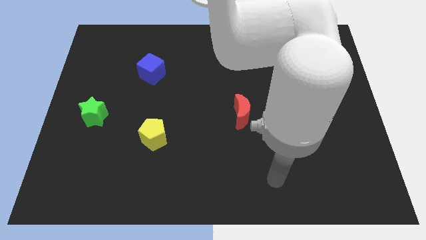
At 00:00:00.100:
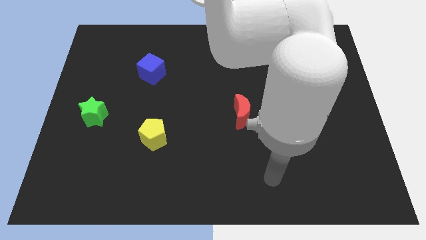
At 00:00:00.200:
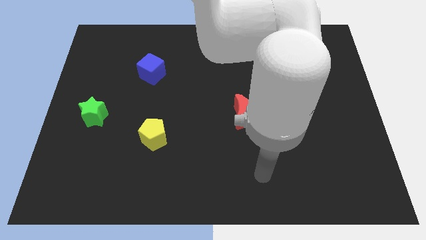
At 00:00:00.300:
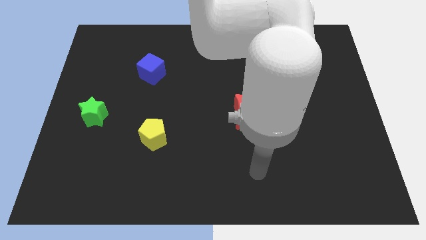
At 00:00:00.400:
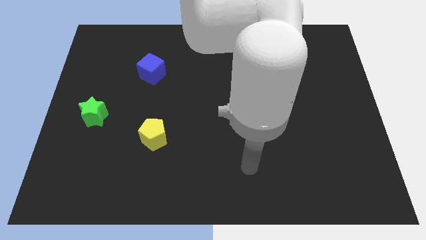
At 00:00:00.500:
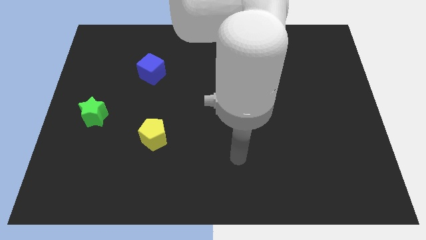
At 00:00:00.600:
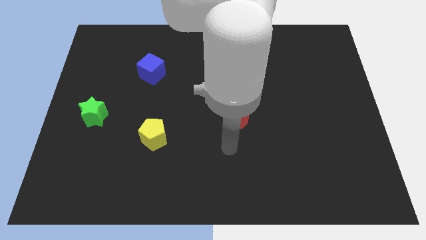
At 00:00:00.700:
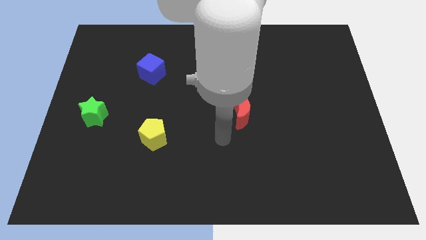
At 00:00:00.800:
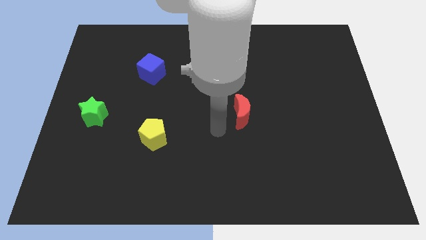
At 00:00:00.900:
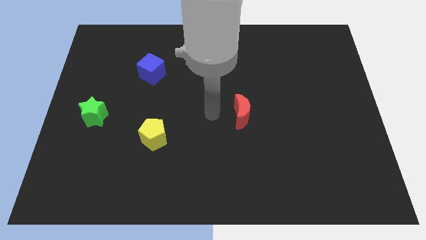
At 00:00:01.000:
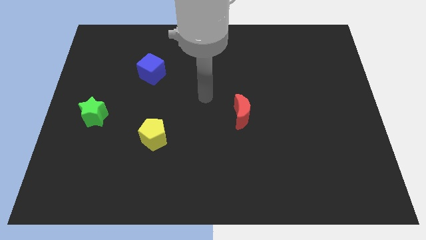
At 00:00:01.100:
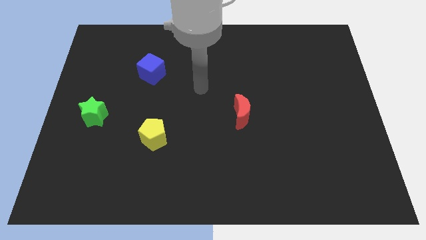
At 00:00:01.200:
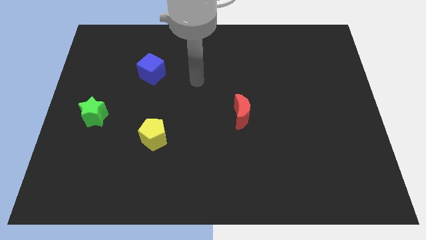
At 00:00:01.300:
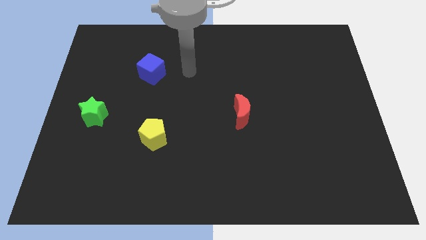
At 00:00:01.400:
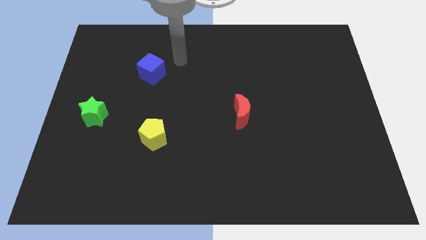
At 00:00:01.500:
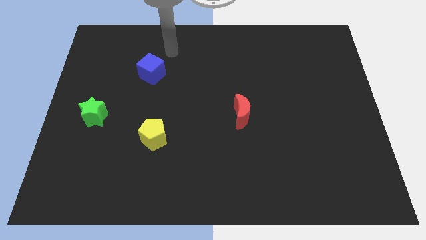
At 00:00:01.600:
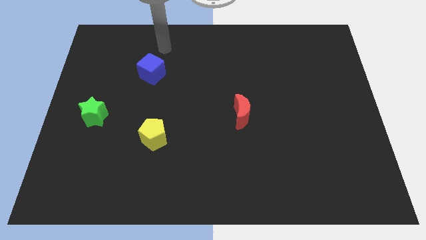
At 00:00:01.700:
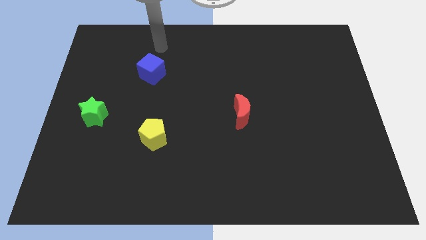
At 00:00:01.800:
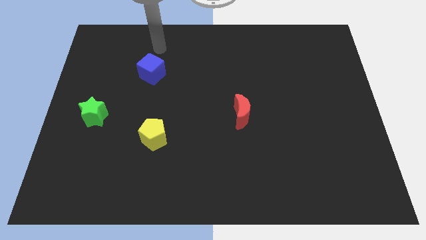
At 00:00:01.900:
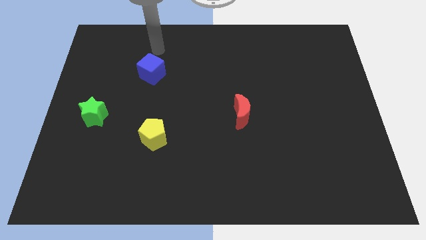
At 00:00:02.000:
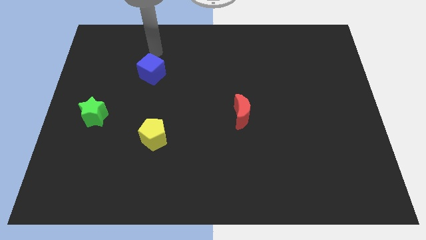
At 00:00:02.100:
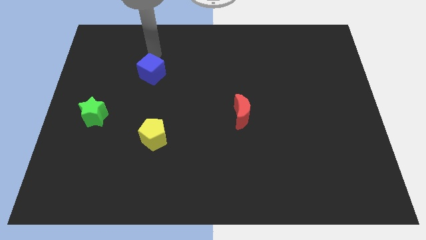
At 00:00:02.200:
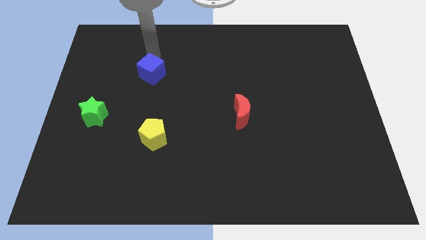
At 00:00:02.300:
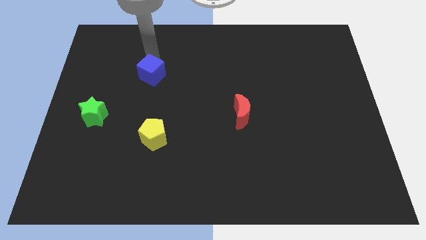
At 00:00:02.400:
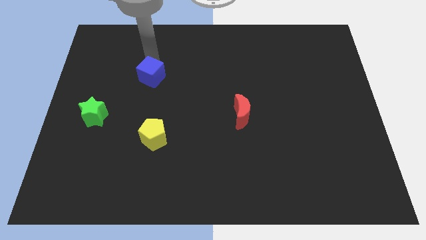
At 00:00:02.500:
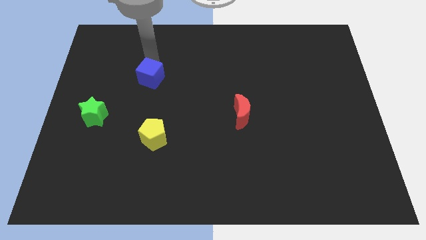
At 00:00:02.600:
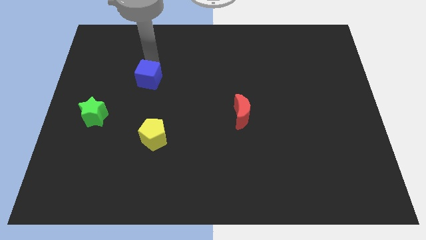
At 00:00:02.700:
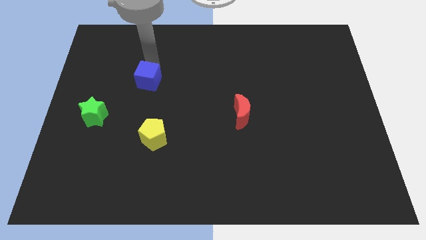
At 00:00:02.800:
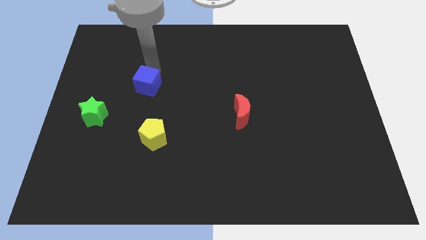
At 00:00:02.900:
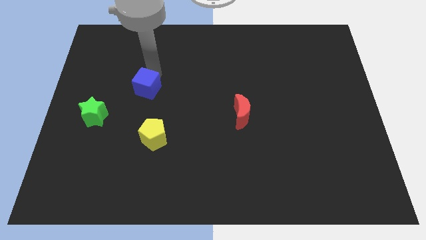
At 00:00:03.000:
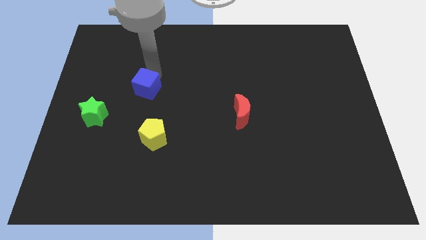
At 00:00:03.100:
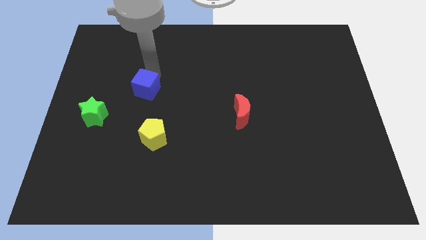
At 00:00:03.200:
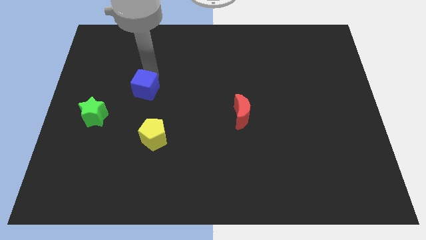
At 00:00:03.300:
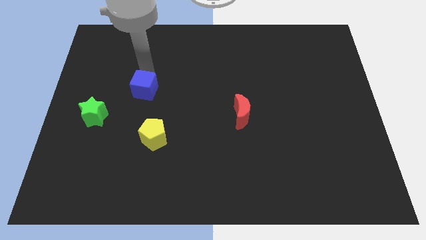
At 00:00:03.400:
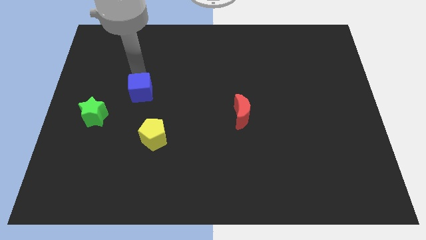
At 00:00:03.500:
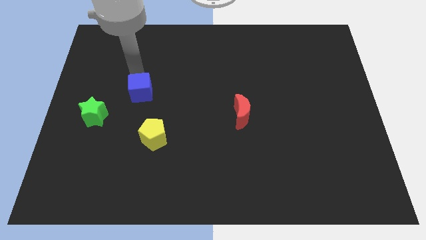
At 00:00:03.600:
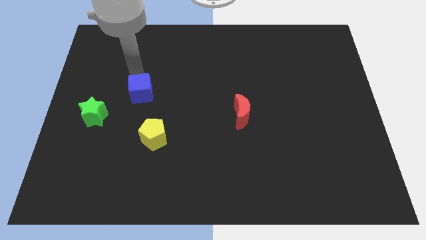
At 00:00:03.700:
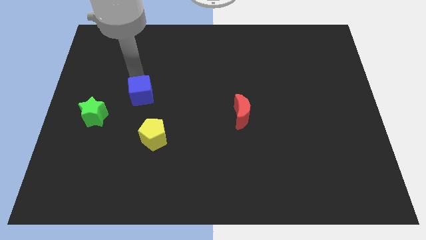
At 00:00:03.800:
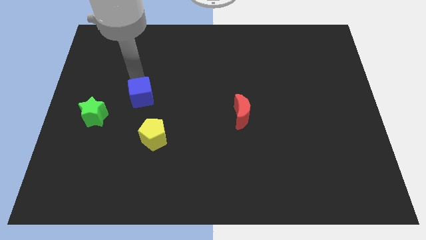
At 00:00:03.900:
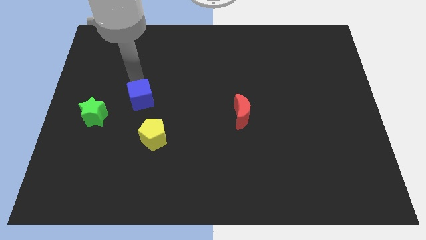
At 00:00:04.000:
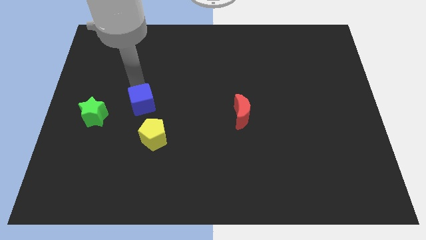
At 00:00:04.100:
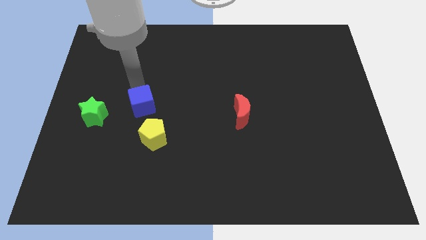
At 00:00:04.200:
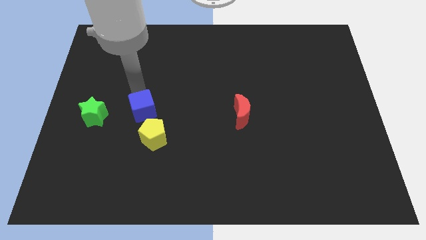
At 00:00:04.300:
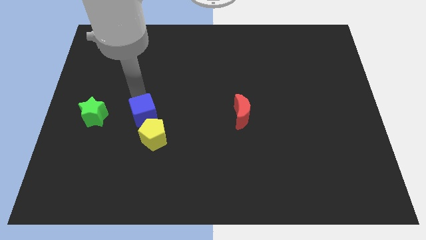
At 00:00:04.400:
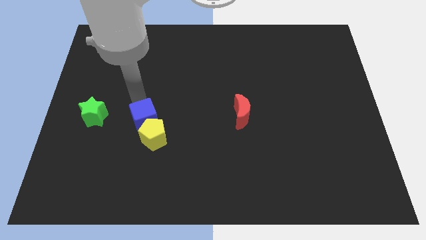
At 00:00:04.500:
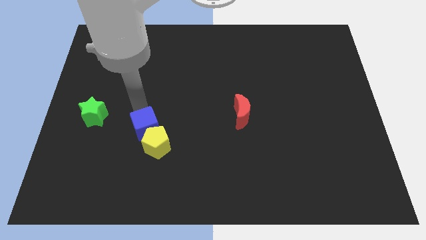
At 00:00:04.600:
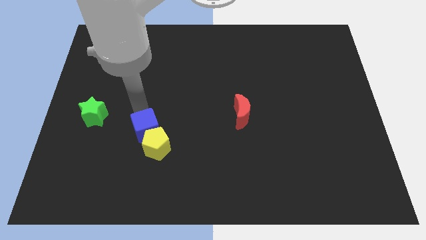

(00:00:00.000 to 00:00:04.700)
push the blue cube towards the pentagon

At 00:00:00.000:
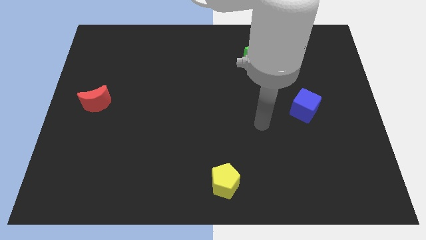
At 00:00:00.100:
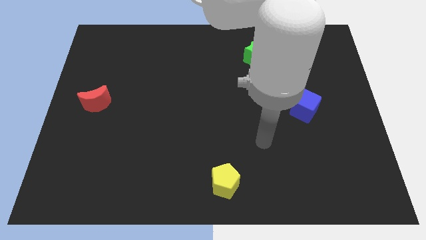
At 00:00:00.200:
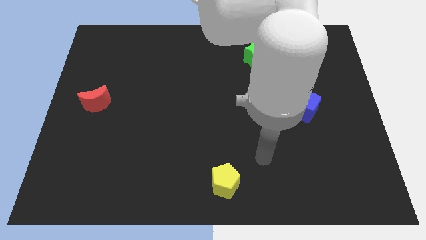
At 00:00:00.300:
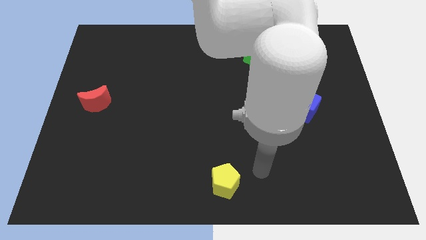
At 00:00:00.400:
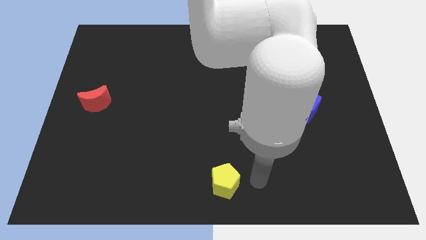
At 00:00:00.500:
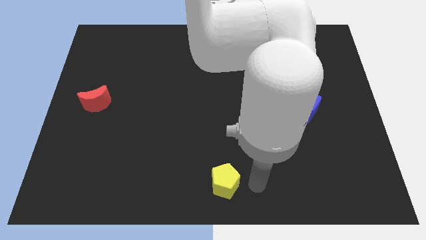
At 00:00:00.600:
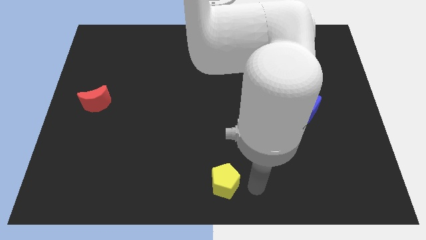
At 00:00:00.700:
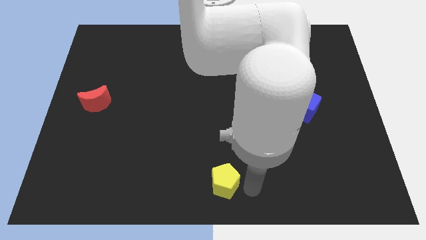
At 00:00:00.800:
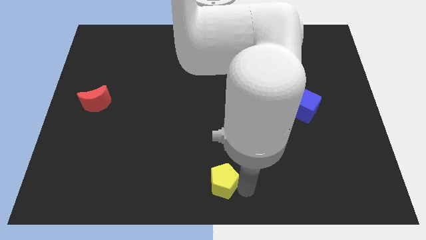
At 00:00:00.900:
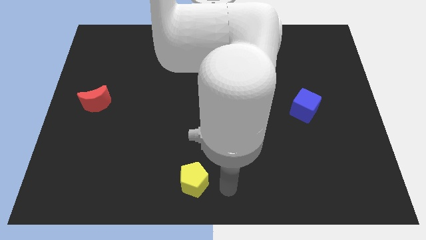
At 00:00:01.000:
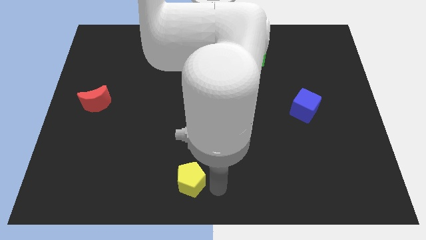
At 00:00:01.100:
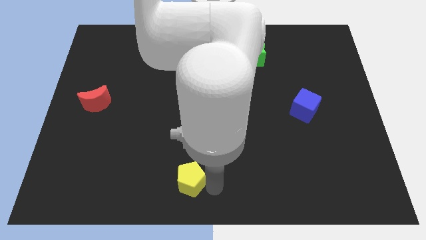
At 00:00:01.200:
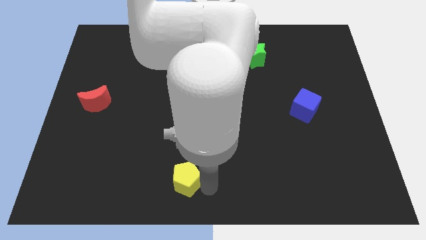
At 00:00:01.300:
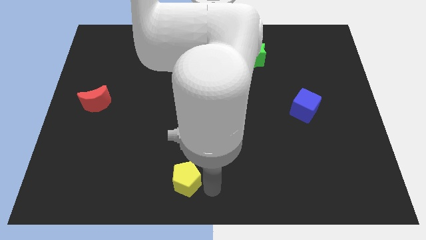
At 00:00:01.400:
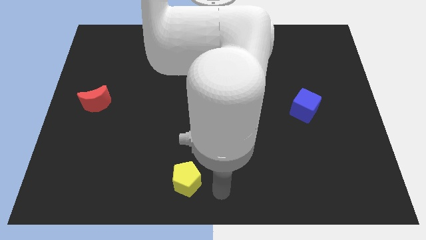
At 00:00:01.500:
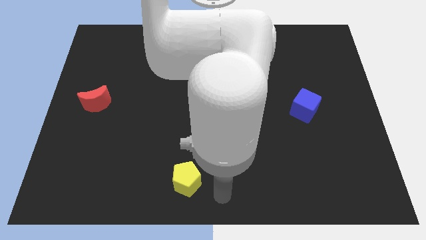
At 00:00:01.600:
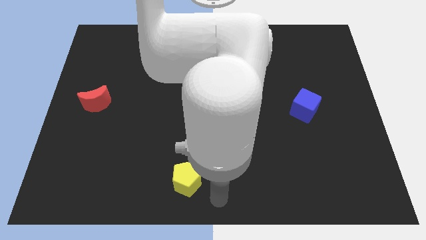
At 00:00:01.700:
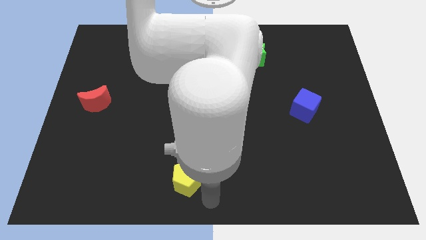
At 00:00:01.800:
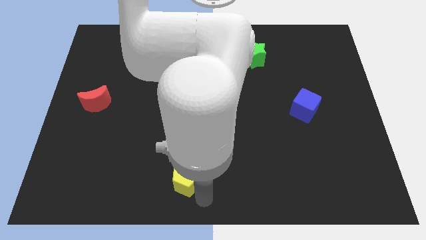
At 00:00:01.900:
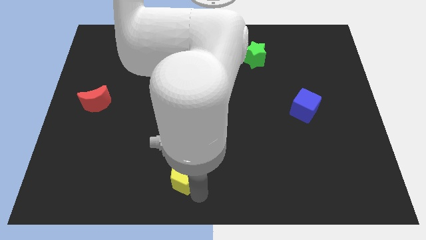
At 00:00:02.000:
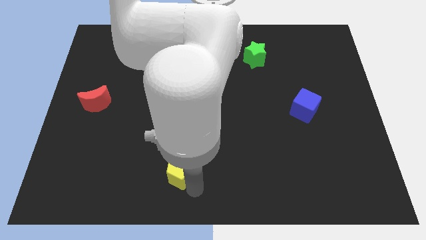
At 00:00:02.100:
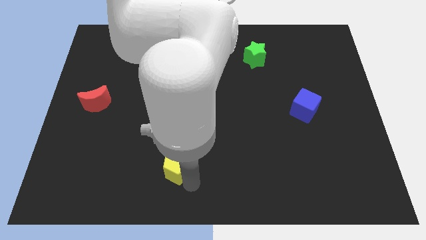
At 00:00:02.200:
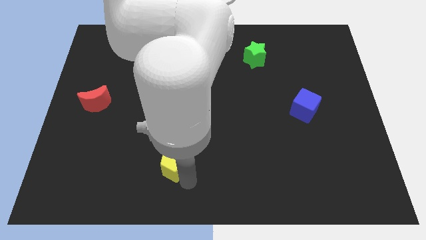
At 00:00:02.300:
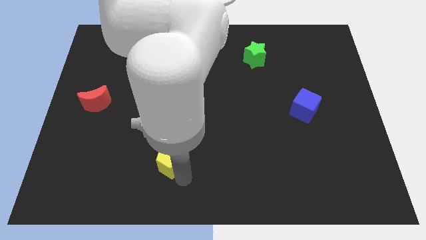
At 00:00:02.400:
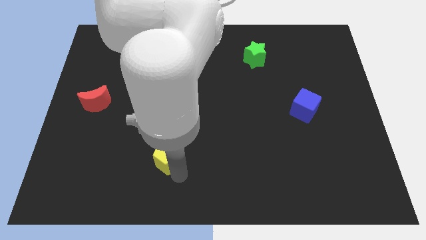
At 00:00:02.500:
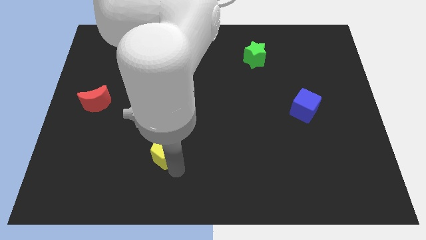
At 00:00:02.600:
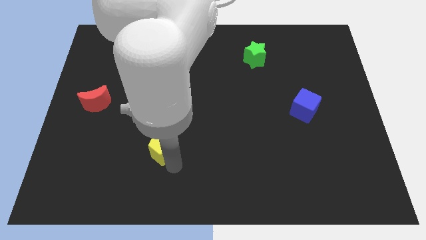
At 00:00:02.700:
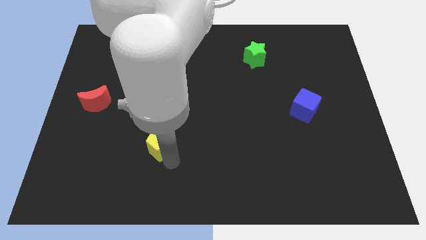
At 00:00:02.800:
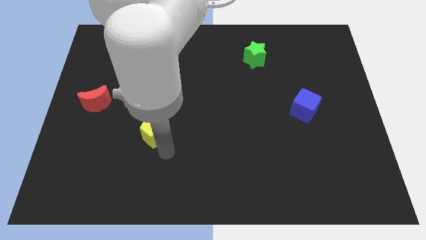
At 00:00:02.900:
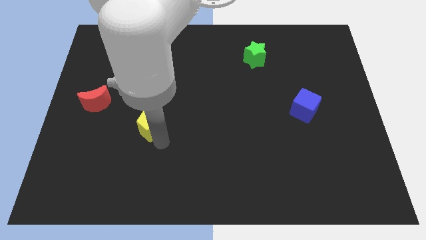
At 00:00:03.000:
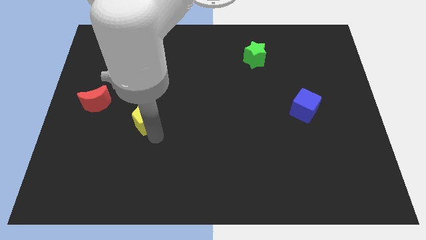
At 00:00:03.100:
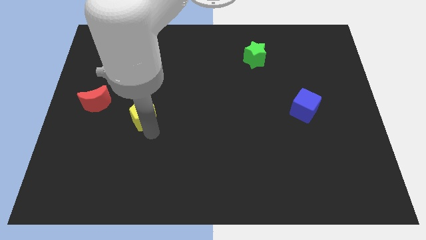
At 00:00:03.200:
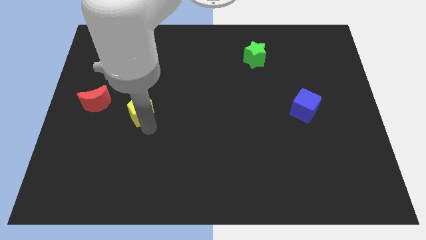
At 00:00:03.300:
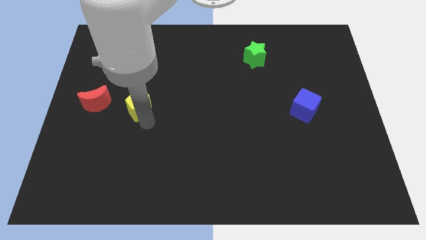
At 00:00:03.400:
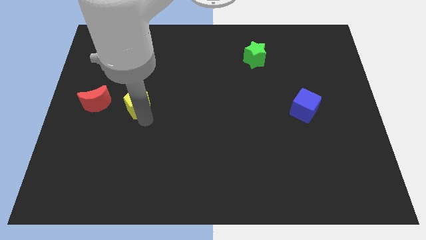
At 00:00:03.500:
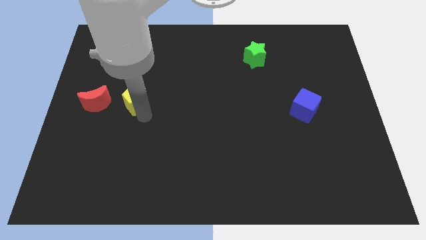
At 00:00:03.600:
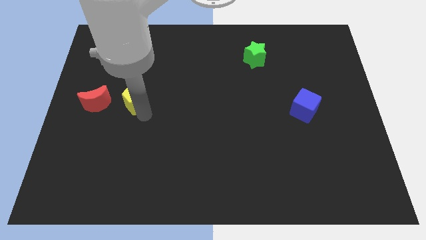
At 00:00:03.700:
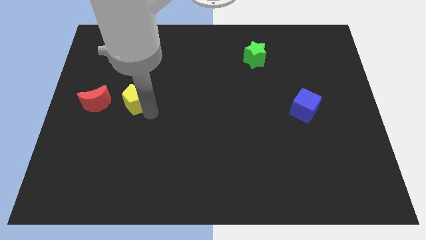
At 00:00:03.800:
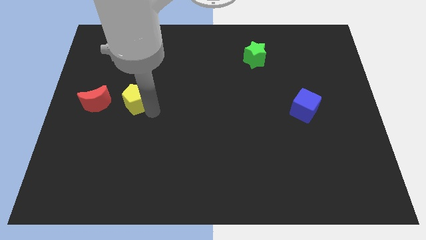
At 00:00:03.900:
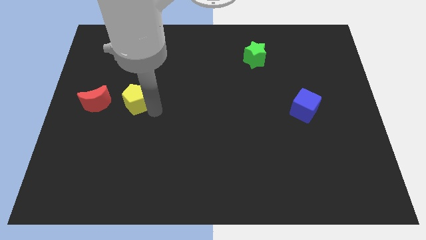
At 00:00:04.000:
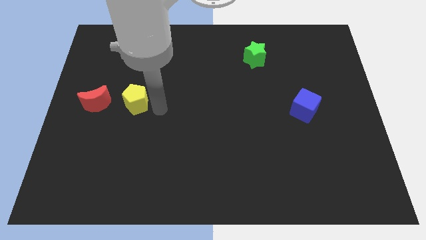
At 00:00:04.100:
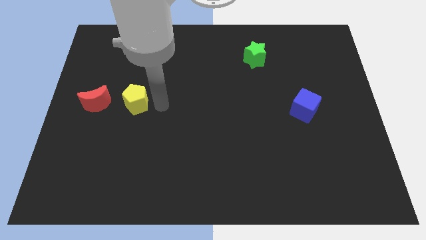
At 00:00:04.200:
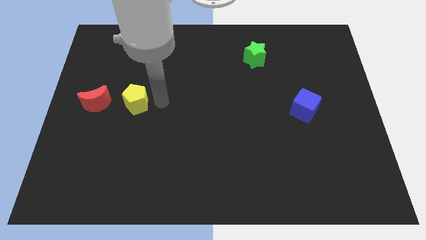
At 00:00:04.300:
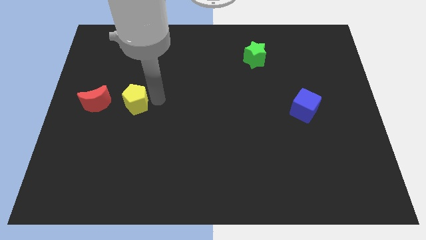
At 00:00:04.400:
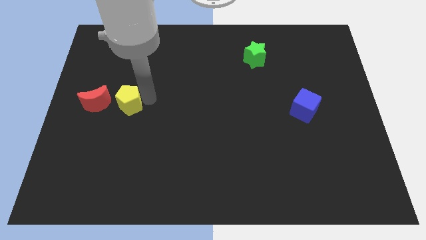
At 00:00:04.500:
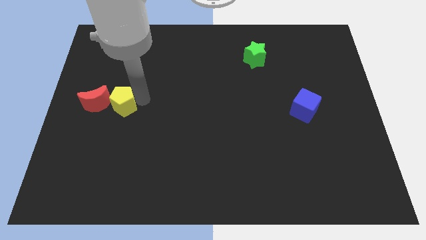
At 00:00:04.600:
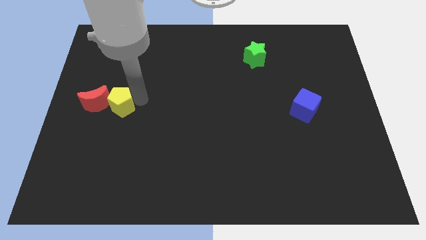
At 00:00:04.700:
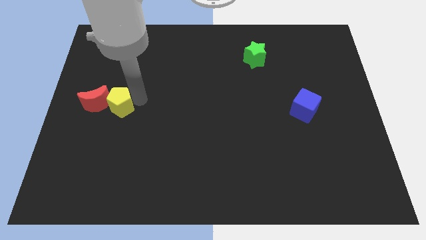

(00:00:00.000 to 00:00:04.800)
put the yellow block to the red block
